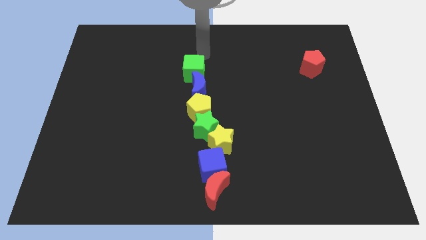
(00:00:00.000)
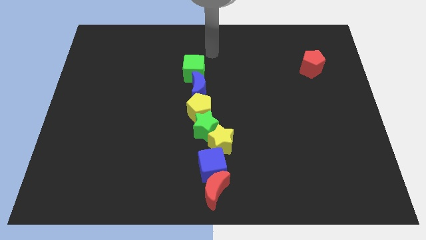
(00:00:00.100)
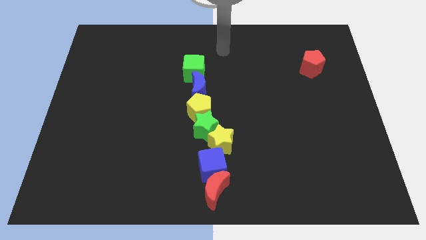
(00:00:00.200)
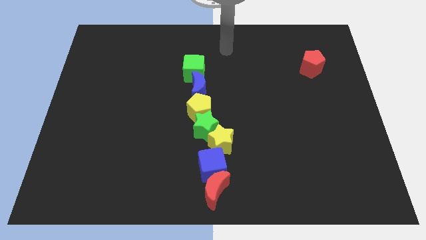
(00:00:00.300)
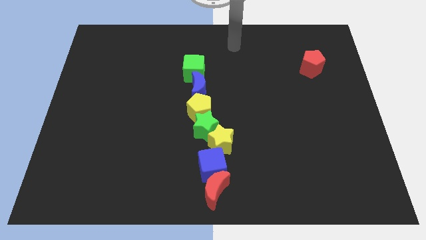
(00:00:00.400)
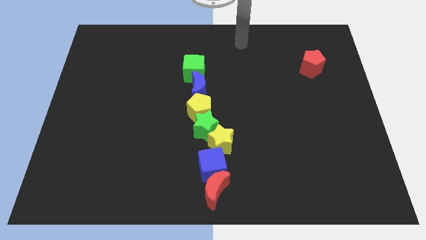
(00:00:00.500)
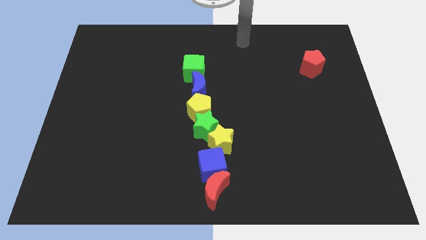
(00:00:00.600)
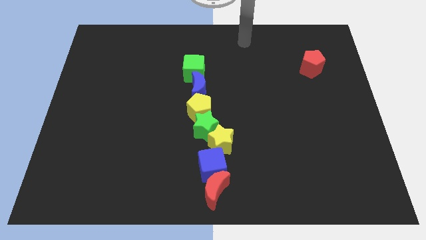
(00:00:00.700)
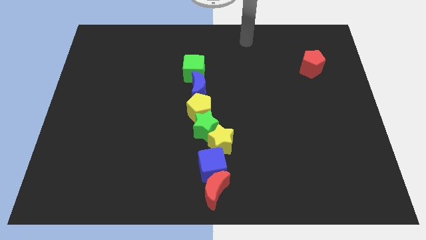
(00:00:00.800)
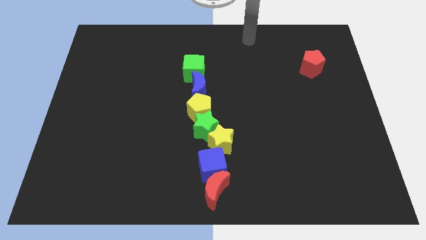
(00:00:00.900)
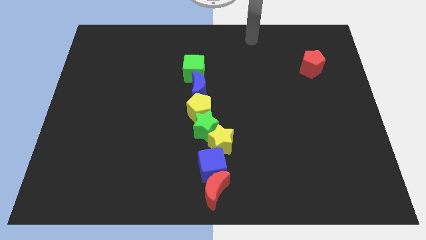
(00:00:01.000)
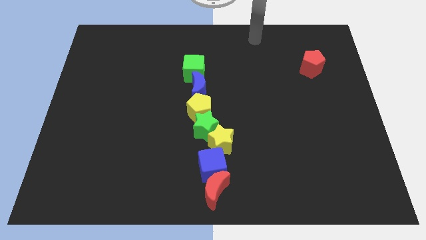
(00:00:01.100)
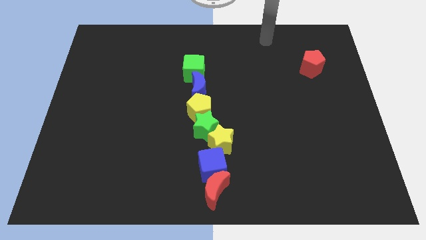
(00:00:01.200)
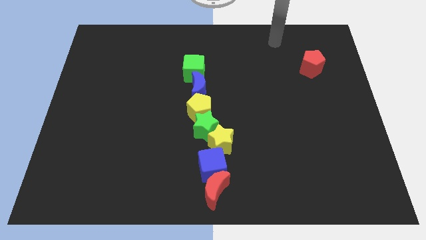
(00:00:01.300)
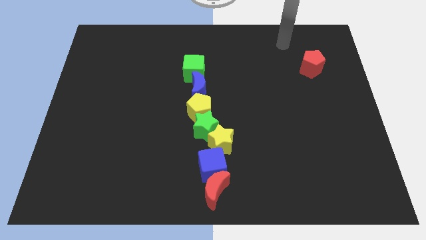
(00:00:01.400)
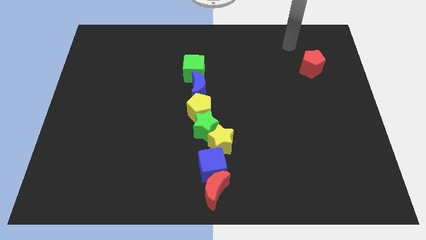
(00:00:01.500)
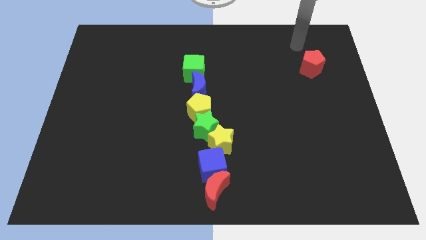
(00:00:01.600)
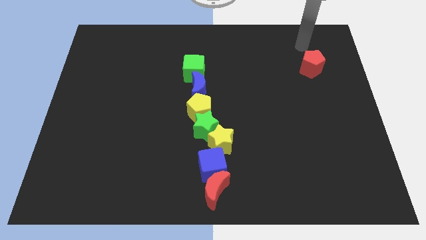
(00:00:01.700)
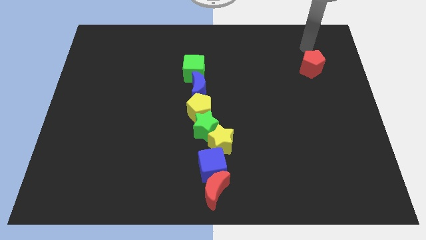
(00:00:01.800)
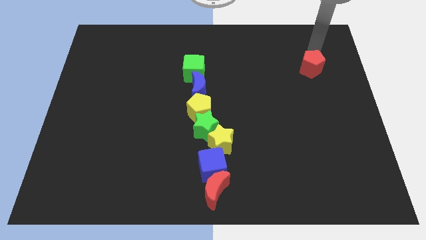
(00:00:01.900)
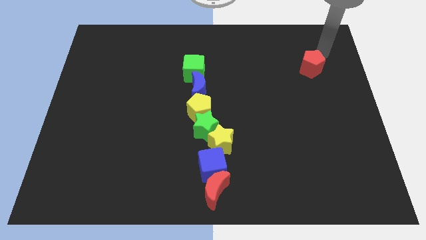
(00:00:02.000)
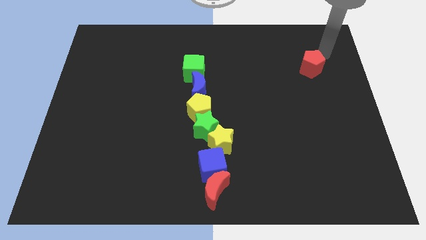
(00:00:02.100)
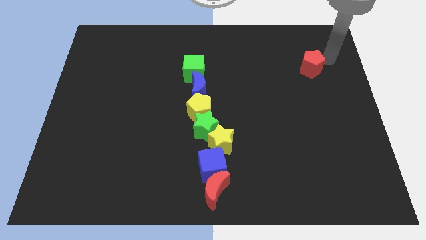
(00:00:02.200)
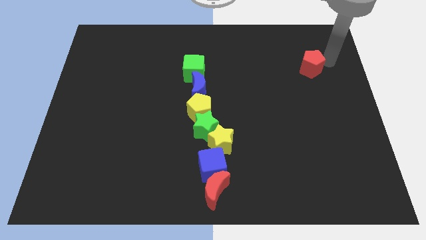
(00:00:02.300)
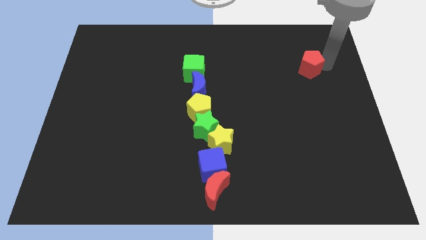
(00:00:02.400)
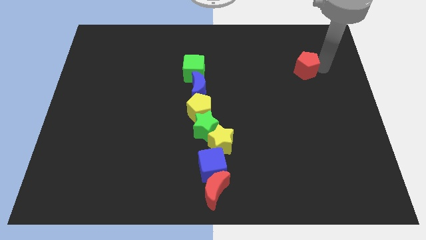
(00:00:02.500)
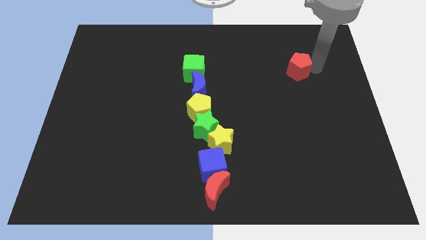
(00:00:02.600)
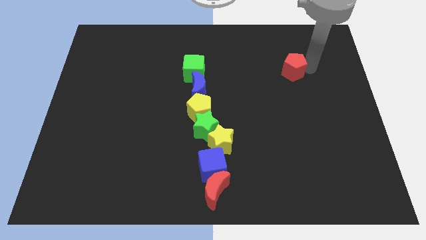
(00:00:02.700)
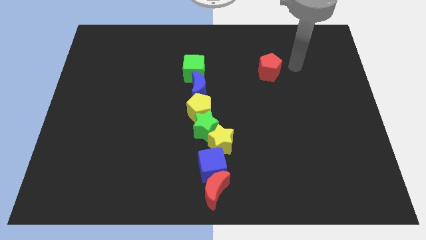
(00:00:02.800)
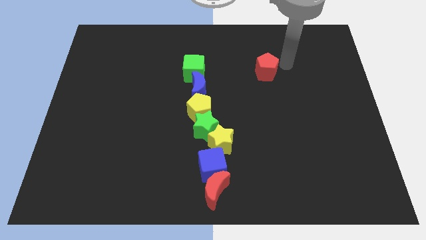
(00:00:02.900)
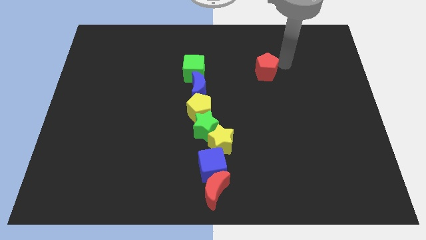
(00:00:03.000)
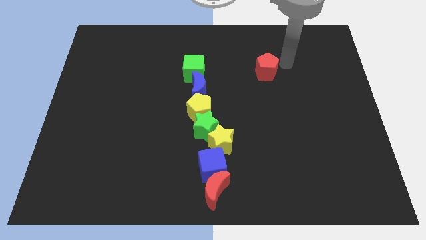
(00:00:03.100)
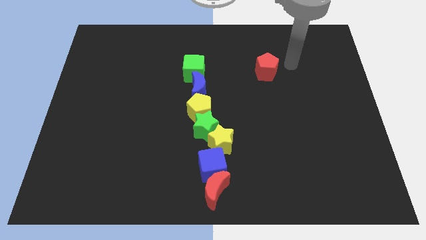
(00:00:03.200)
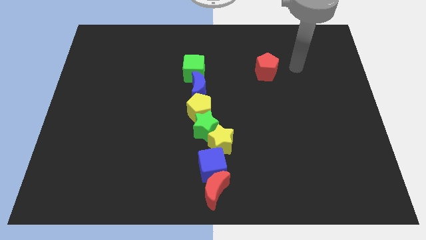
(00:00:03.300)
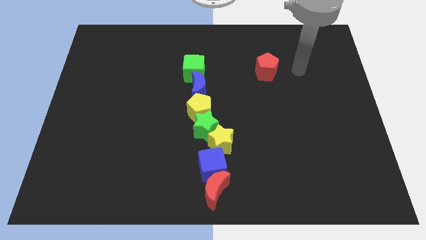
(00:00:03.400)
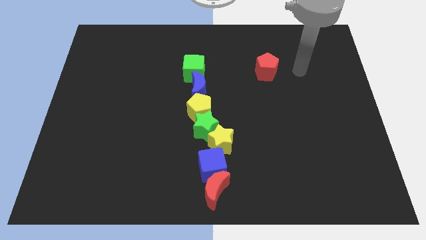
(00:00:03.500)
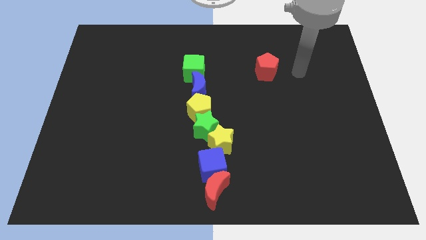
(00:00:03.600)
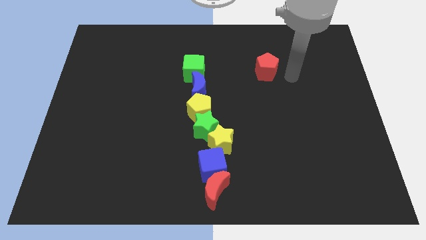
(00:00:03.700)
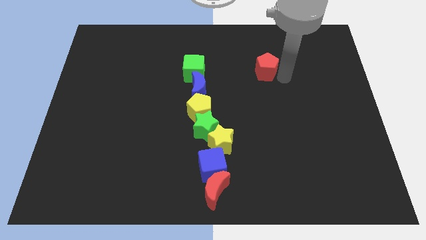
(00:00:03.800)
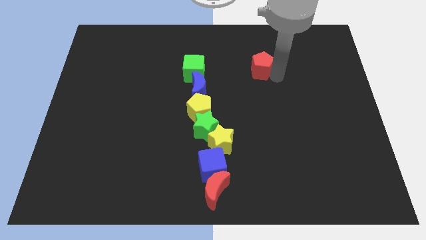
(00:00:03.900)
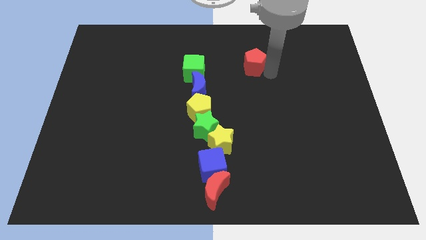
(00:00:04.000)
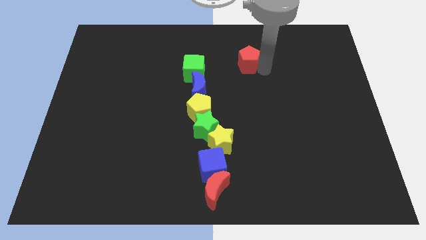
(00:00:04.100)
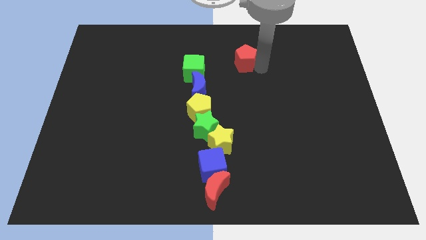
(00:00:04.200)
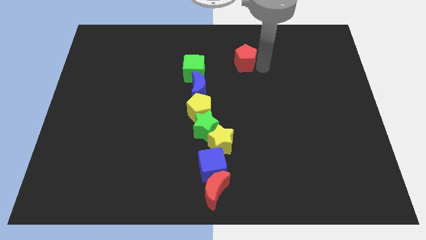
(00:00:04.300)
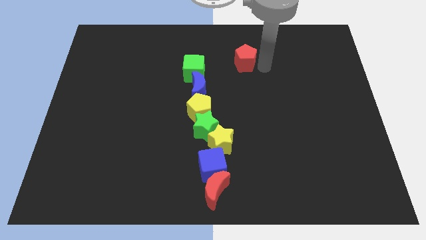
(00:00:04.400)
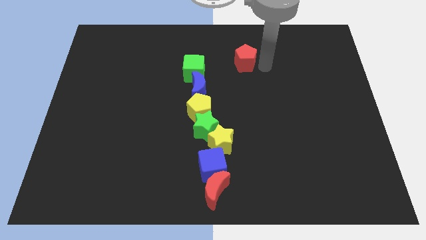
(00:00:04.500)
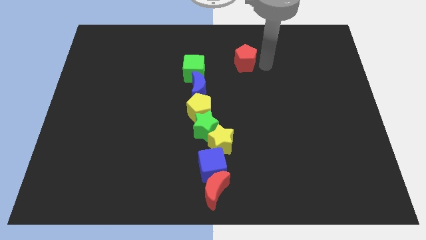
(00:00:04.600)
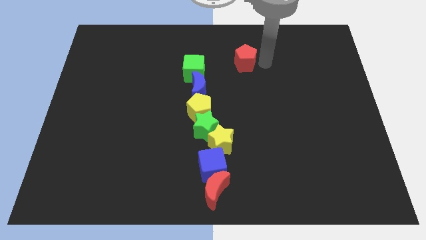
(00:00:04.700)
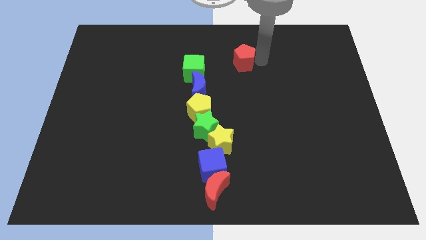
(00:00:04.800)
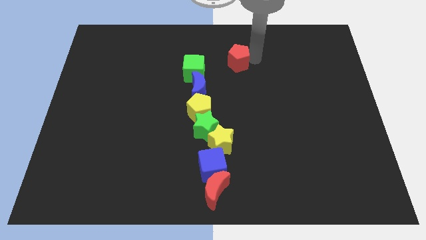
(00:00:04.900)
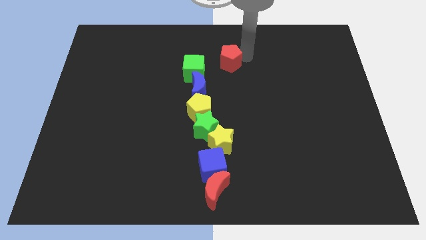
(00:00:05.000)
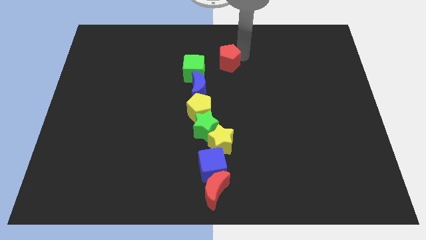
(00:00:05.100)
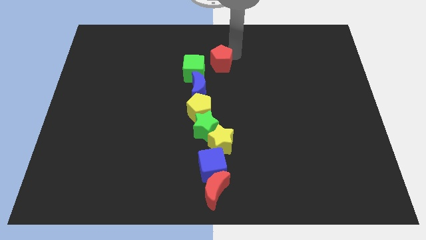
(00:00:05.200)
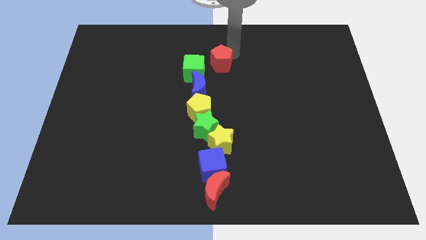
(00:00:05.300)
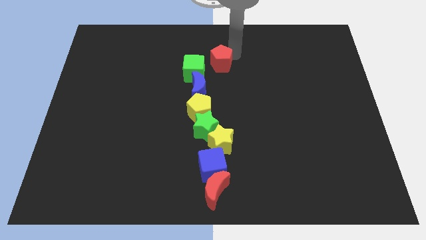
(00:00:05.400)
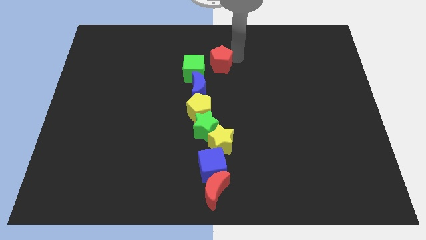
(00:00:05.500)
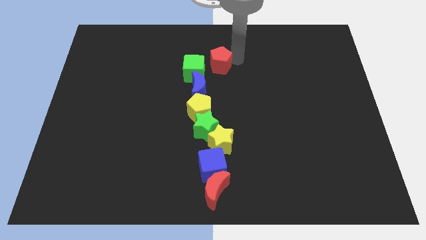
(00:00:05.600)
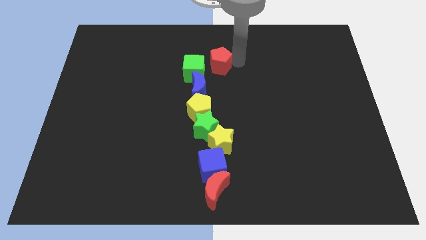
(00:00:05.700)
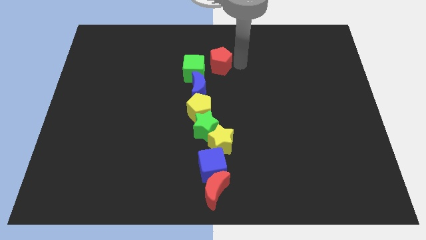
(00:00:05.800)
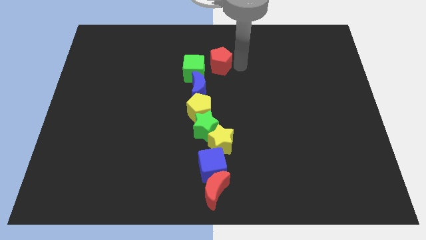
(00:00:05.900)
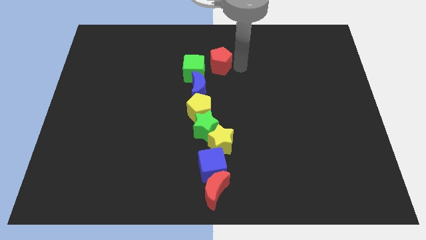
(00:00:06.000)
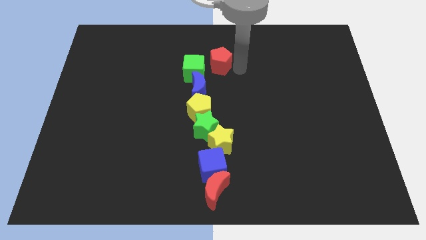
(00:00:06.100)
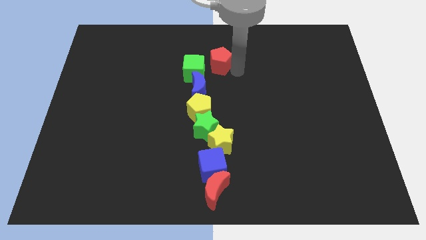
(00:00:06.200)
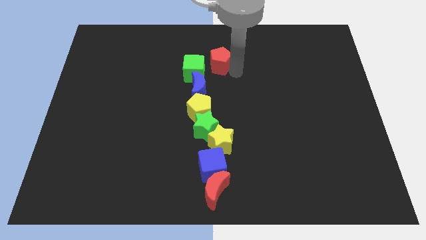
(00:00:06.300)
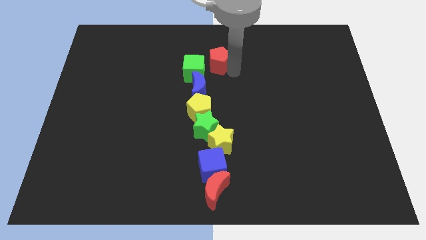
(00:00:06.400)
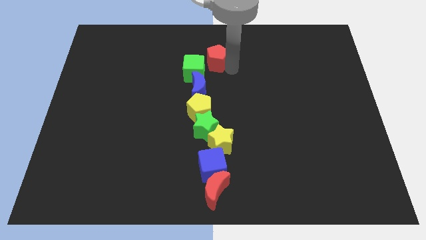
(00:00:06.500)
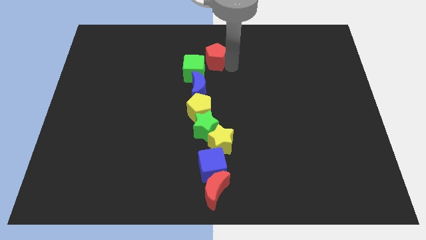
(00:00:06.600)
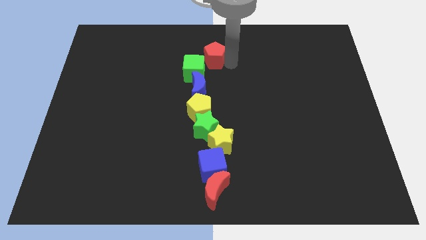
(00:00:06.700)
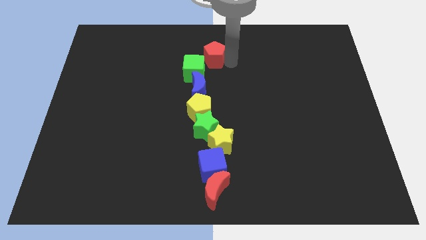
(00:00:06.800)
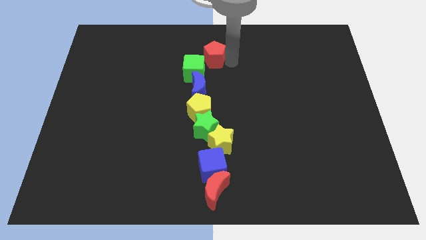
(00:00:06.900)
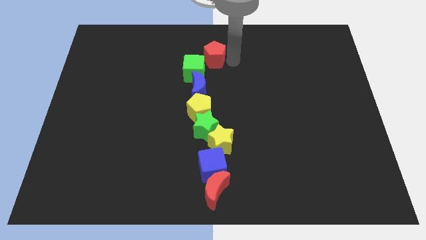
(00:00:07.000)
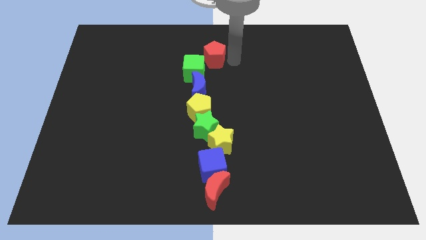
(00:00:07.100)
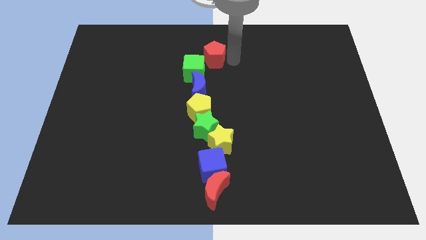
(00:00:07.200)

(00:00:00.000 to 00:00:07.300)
push the red pentagon into the green cube

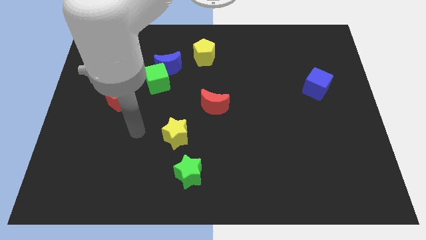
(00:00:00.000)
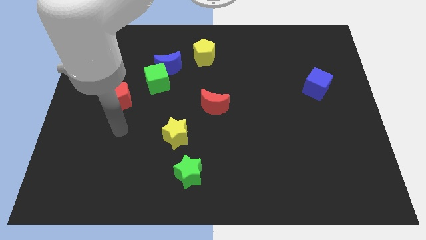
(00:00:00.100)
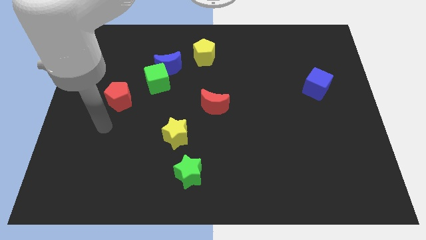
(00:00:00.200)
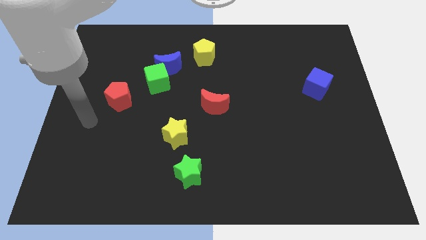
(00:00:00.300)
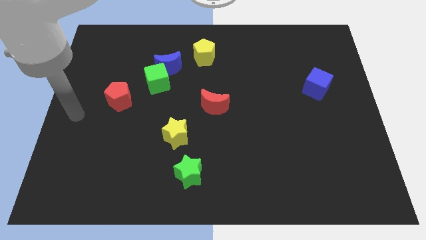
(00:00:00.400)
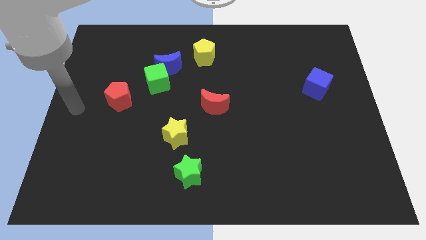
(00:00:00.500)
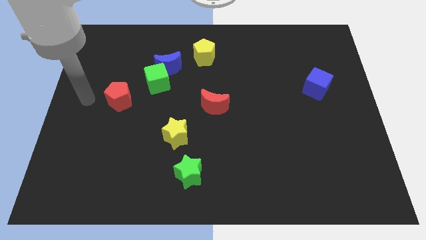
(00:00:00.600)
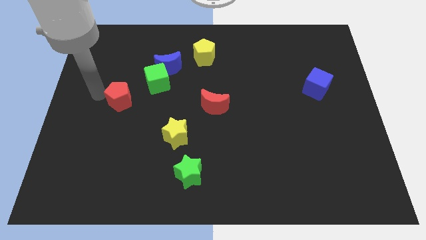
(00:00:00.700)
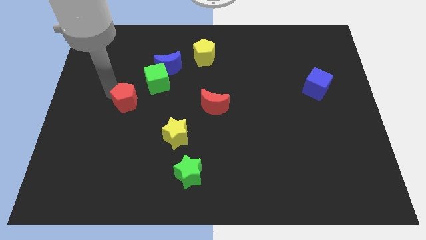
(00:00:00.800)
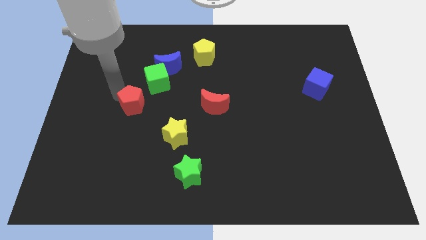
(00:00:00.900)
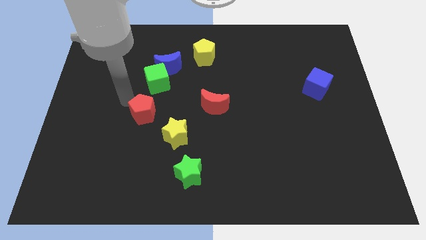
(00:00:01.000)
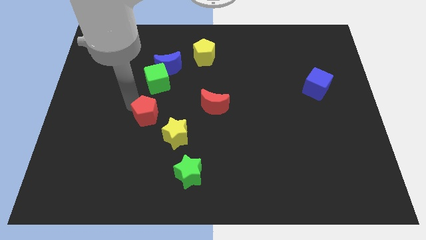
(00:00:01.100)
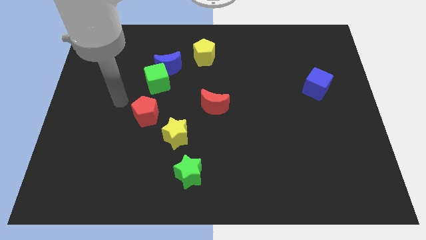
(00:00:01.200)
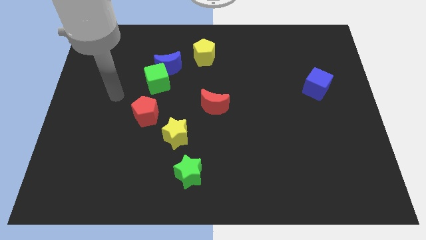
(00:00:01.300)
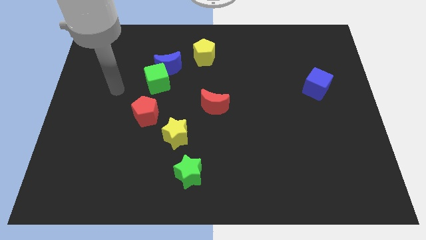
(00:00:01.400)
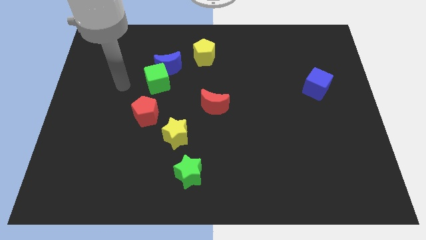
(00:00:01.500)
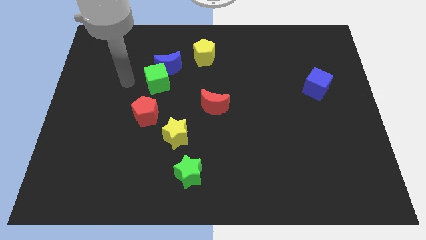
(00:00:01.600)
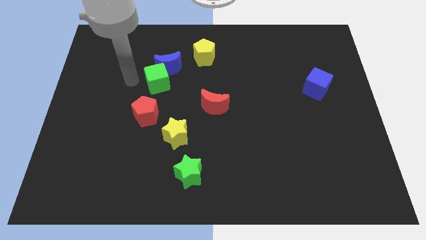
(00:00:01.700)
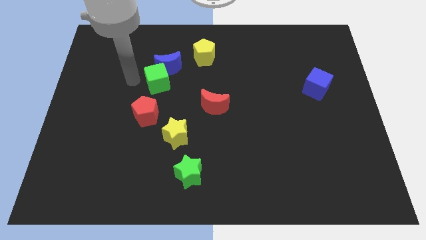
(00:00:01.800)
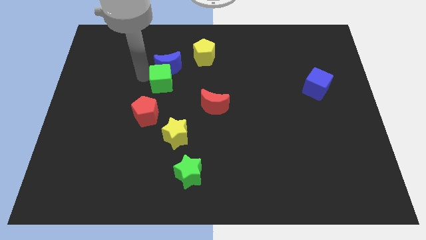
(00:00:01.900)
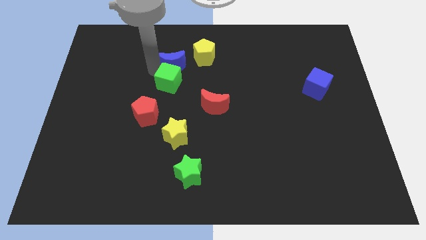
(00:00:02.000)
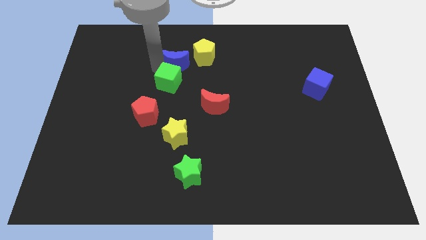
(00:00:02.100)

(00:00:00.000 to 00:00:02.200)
move green cube and red pentagon slightly right
